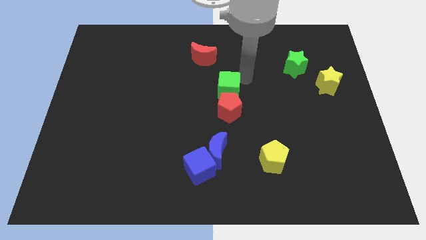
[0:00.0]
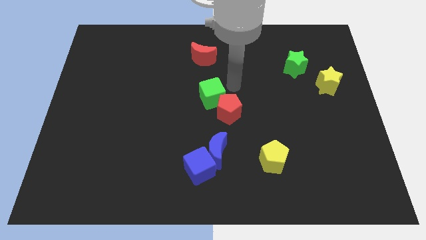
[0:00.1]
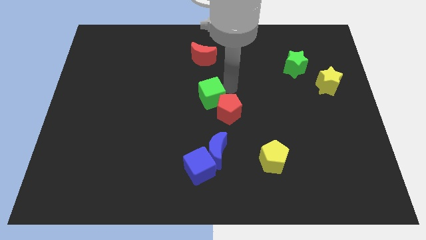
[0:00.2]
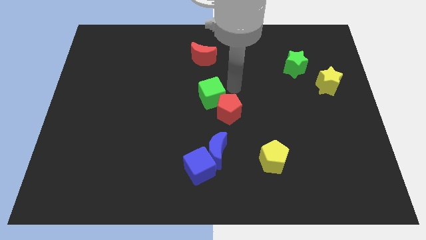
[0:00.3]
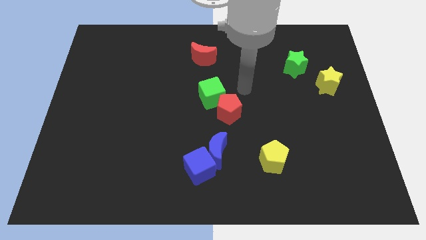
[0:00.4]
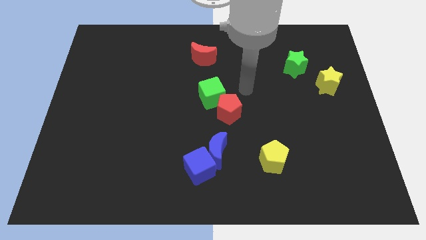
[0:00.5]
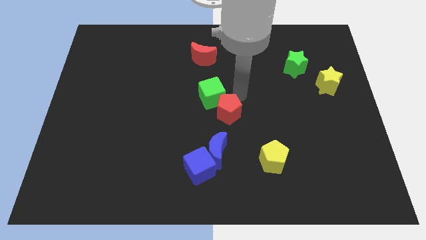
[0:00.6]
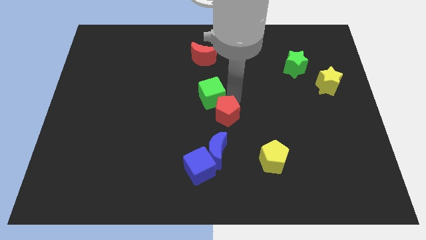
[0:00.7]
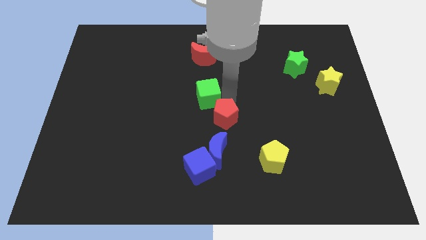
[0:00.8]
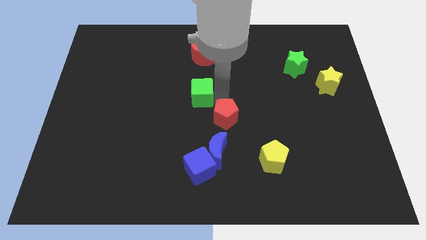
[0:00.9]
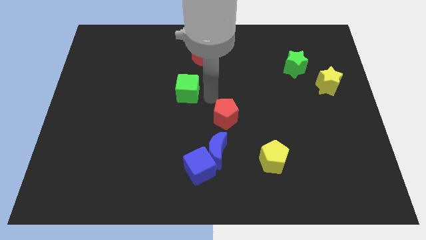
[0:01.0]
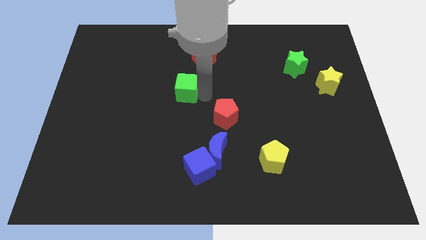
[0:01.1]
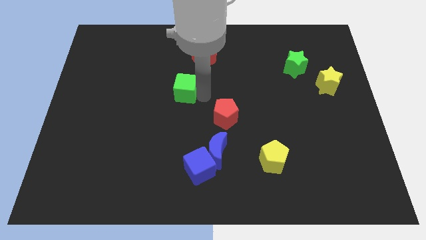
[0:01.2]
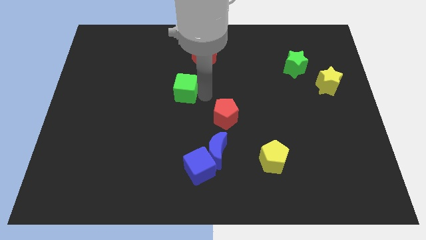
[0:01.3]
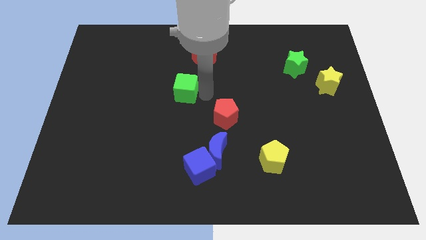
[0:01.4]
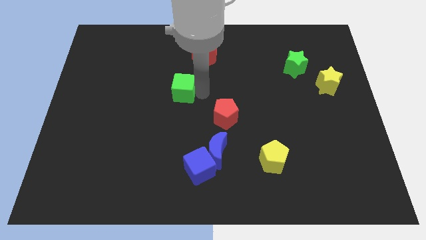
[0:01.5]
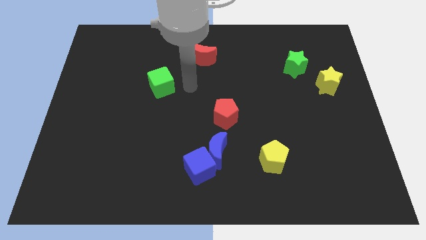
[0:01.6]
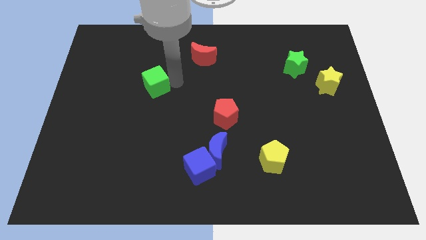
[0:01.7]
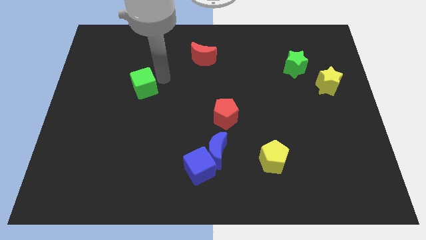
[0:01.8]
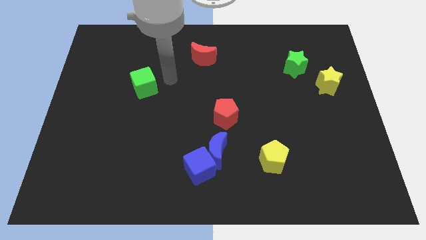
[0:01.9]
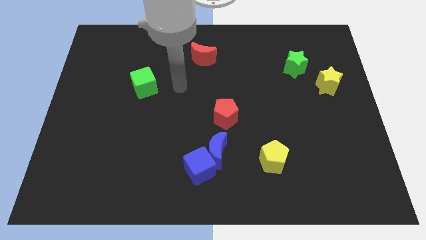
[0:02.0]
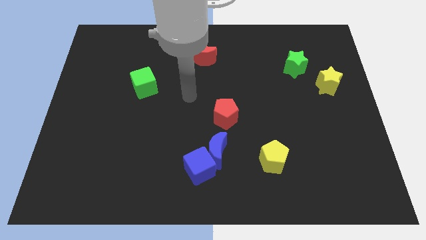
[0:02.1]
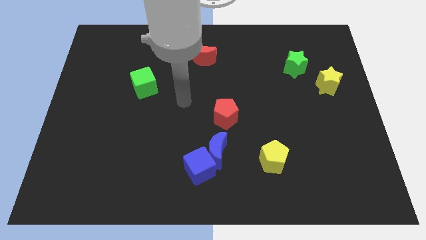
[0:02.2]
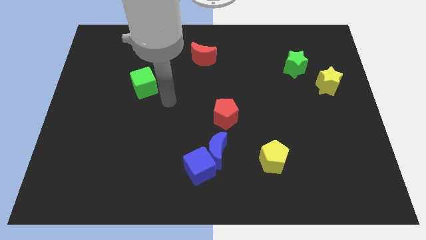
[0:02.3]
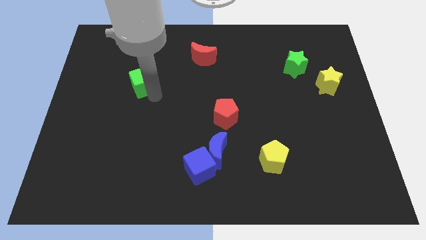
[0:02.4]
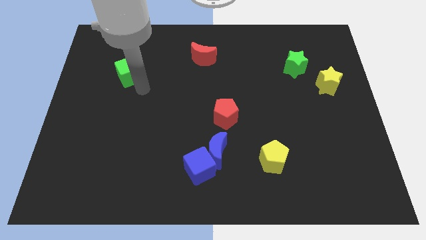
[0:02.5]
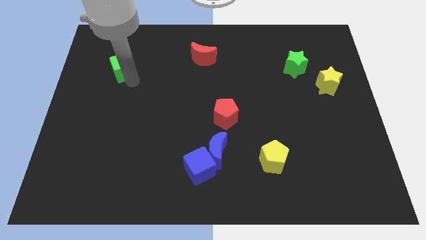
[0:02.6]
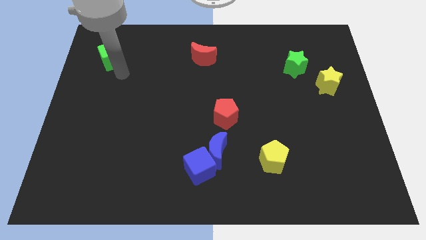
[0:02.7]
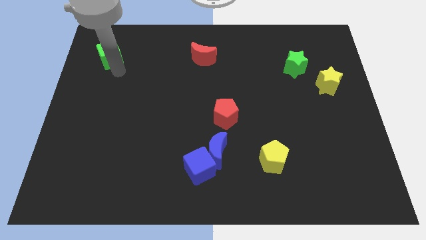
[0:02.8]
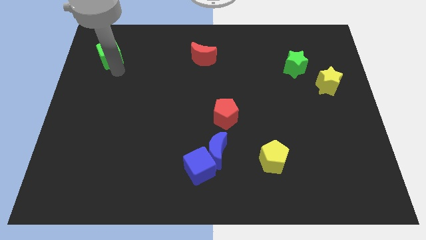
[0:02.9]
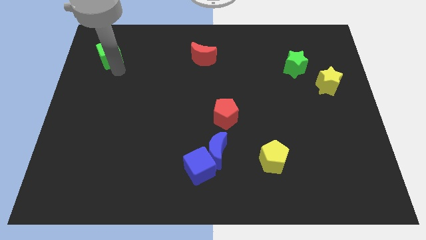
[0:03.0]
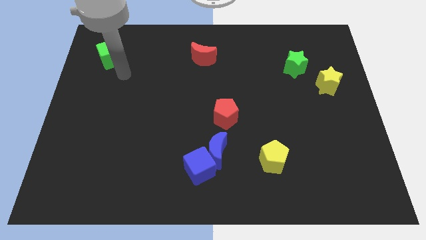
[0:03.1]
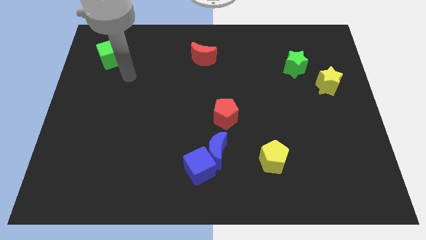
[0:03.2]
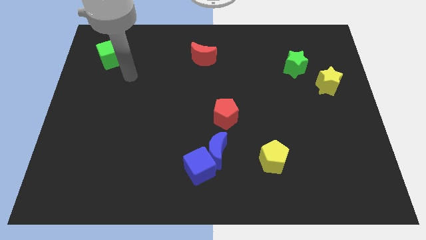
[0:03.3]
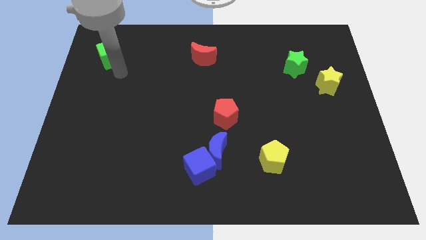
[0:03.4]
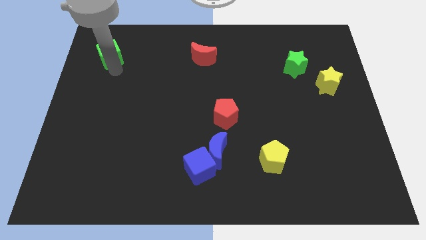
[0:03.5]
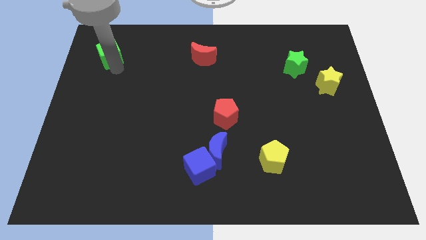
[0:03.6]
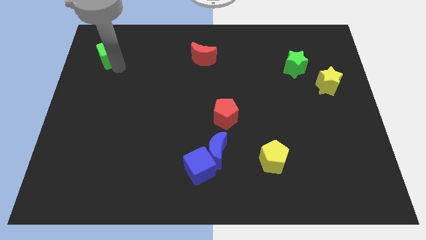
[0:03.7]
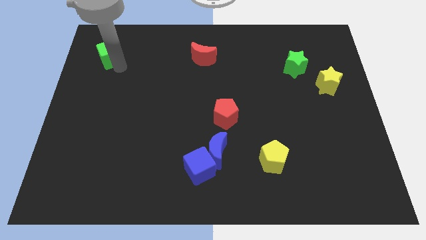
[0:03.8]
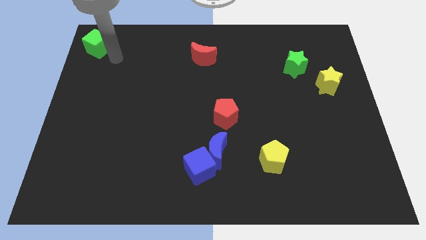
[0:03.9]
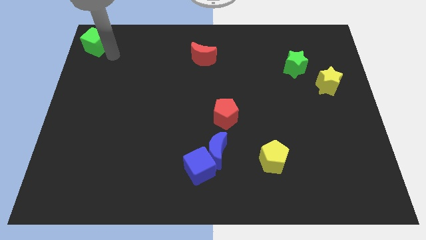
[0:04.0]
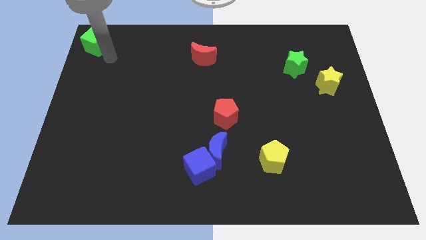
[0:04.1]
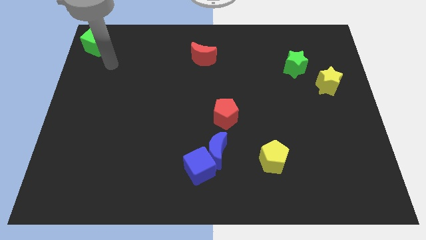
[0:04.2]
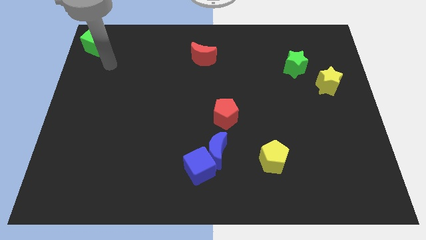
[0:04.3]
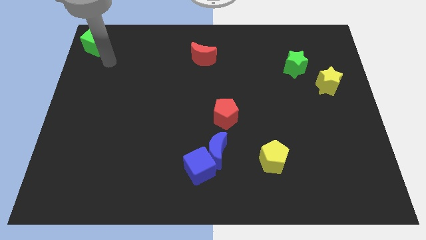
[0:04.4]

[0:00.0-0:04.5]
move the green cube diagonally top left to the blue cube

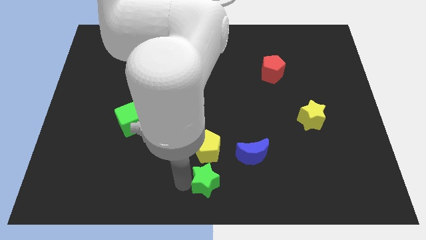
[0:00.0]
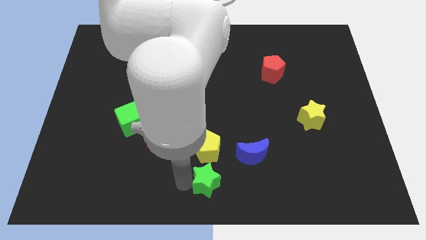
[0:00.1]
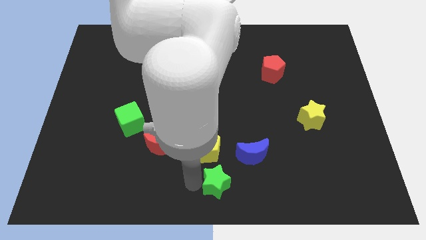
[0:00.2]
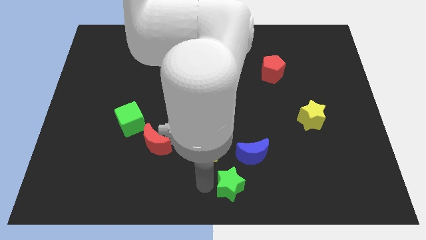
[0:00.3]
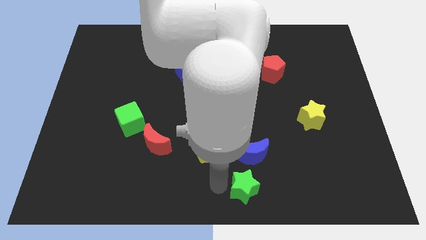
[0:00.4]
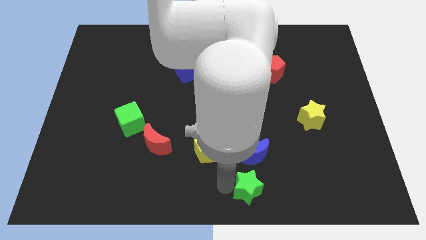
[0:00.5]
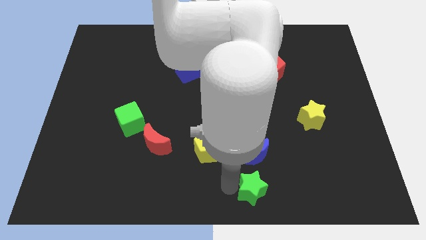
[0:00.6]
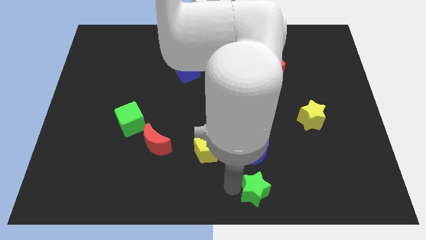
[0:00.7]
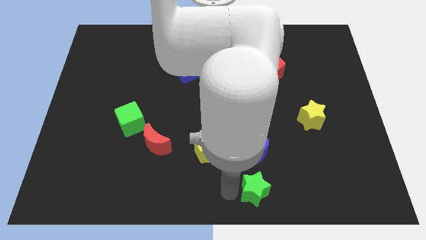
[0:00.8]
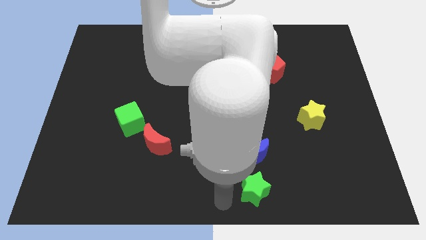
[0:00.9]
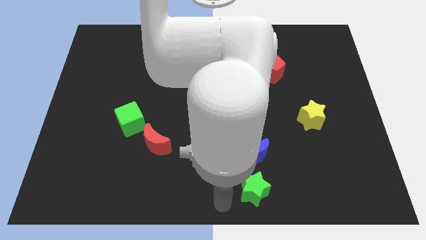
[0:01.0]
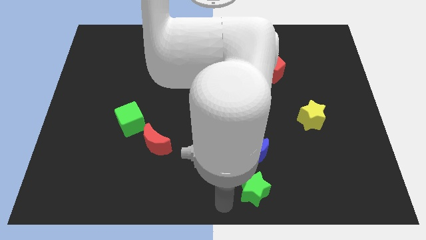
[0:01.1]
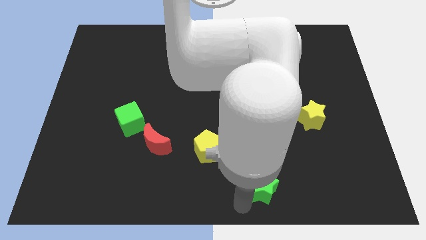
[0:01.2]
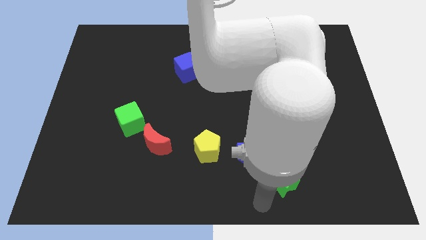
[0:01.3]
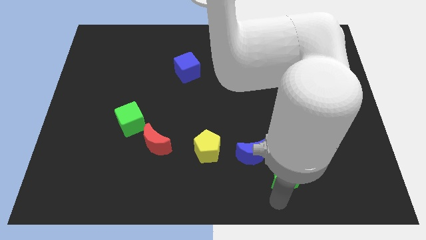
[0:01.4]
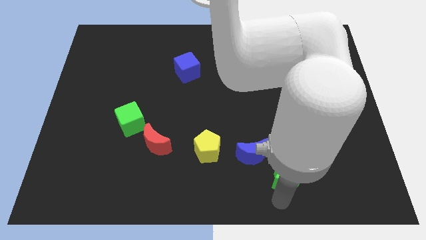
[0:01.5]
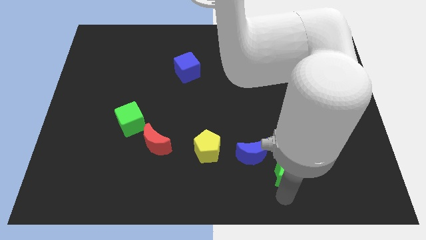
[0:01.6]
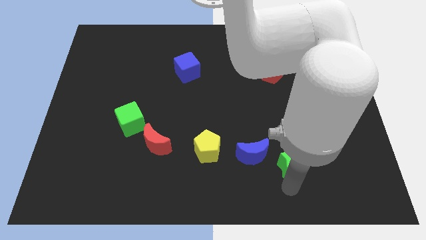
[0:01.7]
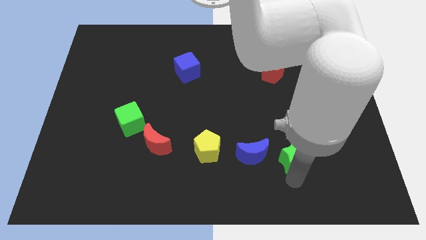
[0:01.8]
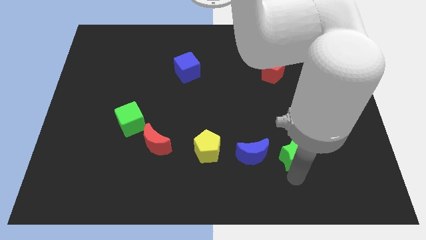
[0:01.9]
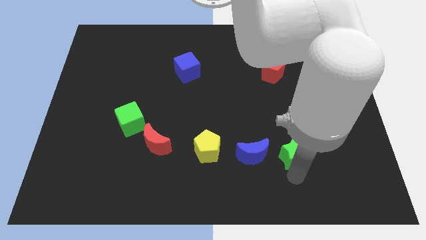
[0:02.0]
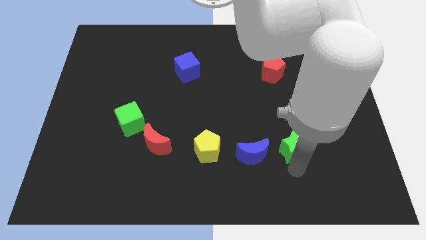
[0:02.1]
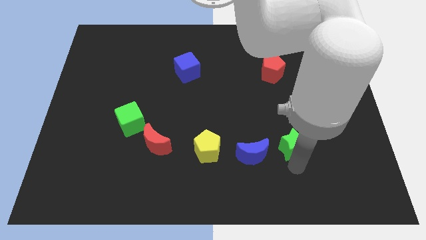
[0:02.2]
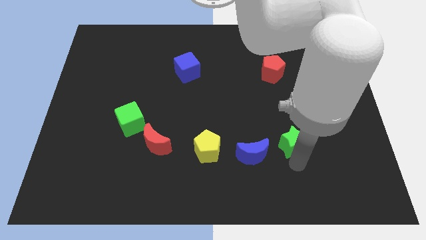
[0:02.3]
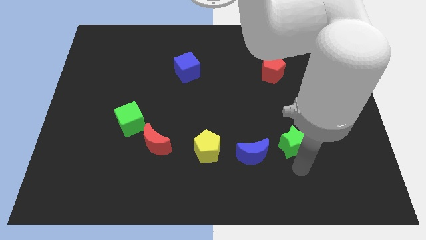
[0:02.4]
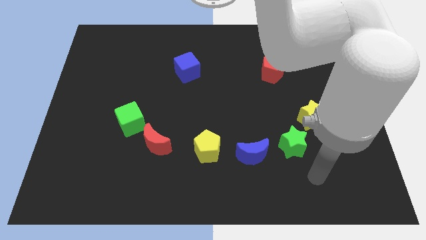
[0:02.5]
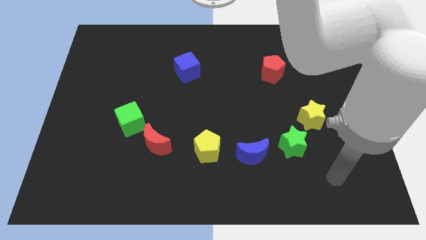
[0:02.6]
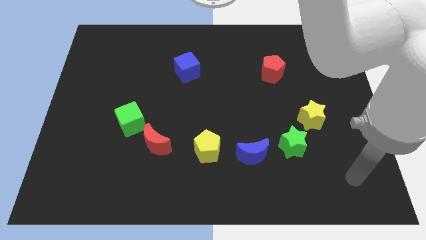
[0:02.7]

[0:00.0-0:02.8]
place green star to the right of blue moon

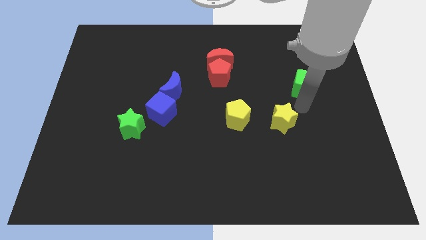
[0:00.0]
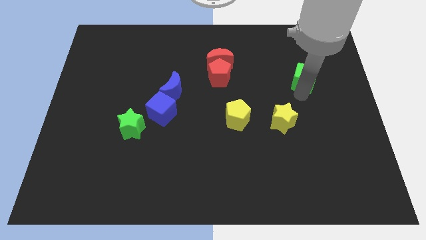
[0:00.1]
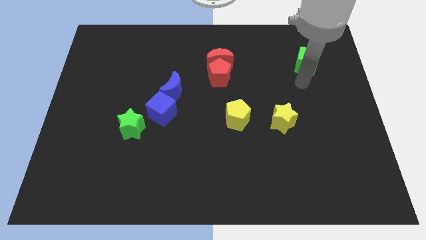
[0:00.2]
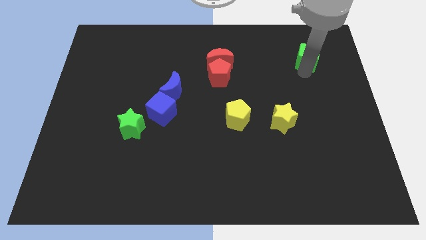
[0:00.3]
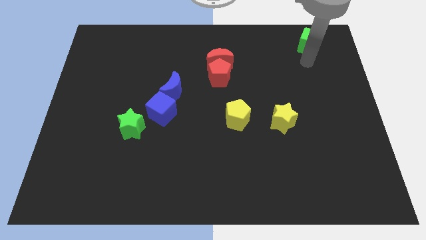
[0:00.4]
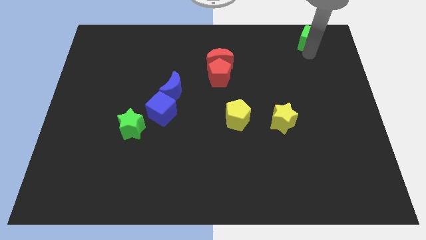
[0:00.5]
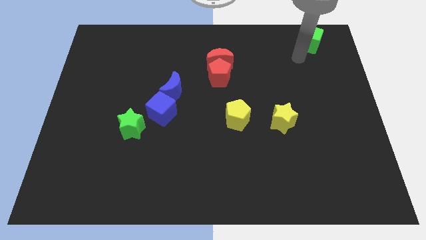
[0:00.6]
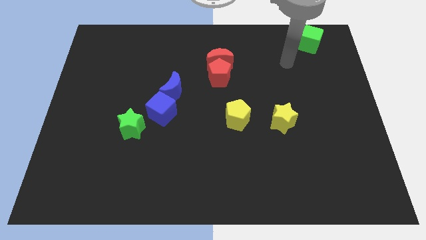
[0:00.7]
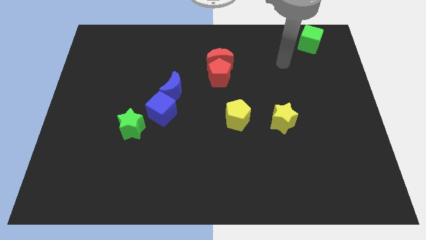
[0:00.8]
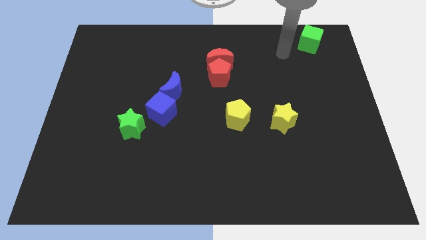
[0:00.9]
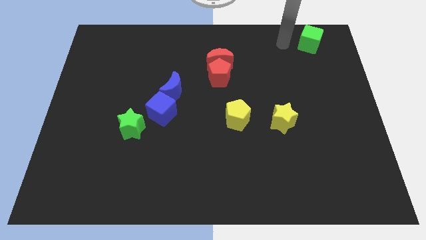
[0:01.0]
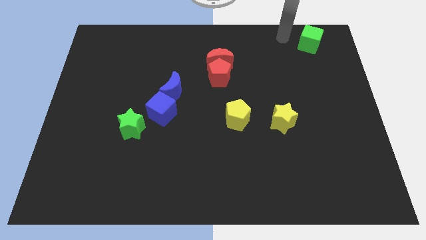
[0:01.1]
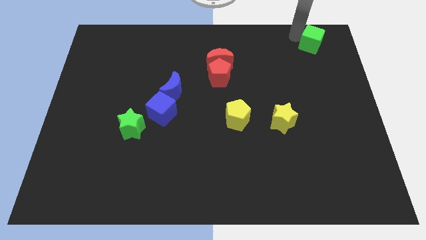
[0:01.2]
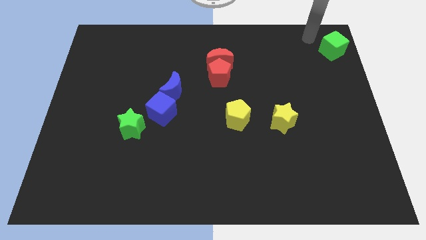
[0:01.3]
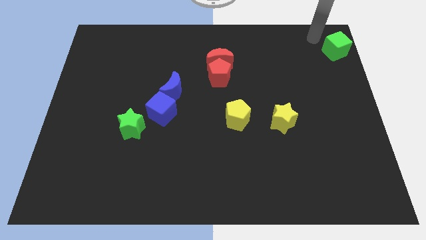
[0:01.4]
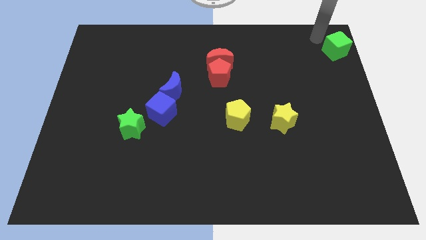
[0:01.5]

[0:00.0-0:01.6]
place the green cube at top right corner of the board
